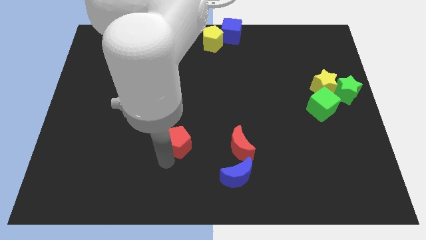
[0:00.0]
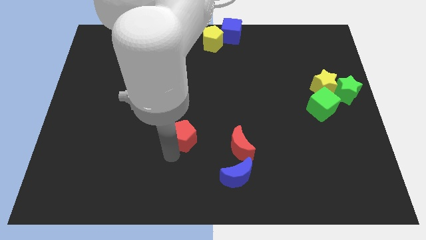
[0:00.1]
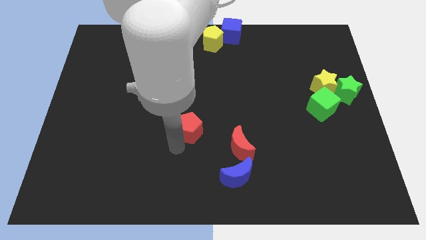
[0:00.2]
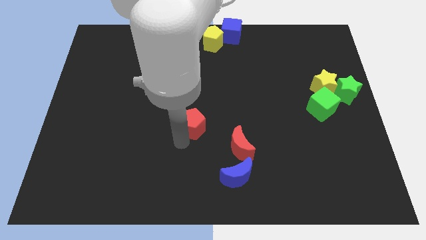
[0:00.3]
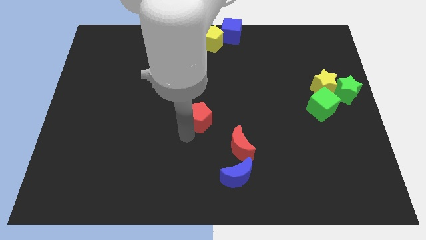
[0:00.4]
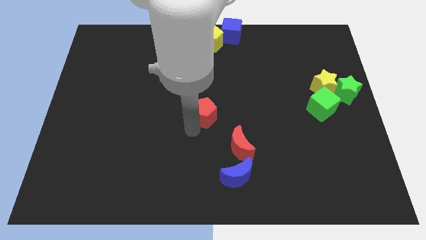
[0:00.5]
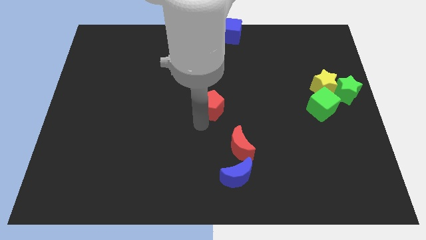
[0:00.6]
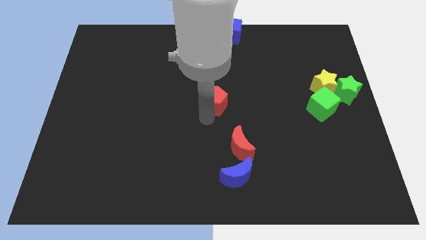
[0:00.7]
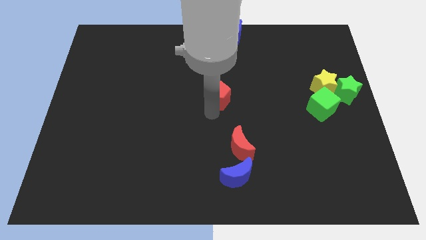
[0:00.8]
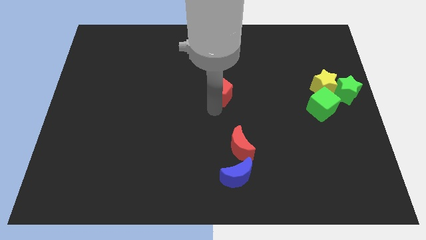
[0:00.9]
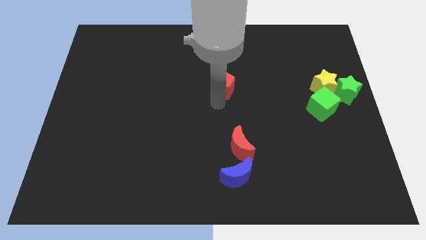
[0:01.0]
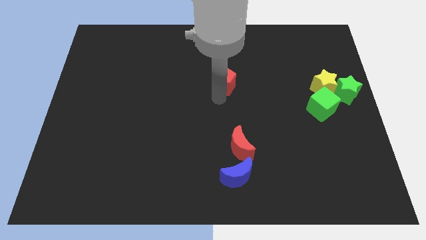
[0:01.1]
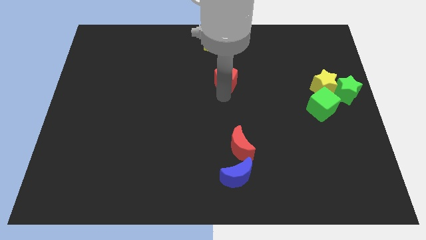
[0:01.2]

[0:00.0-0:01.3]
push the red pentagon diagonally top left to the red moon

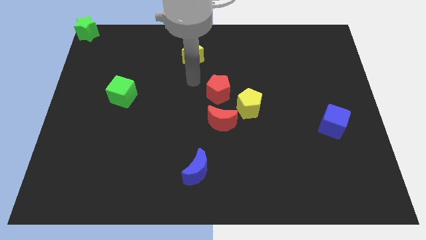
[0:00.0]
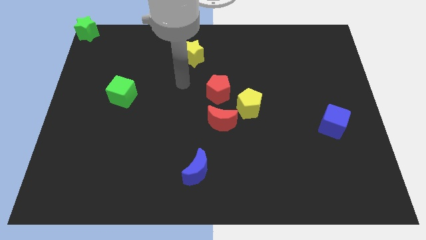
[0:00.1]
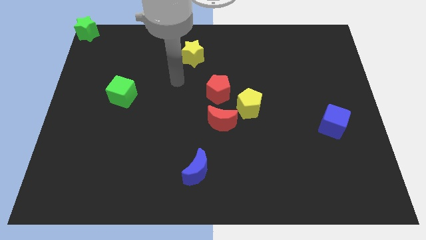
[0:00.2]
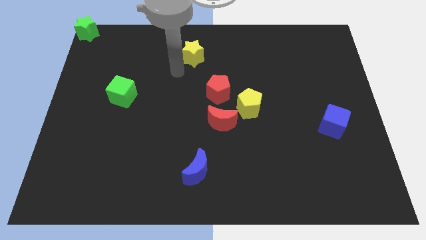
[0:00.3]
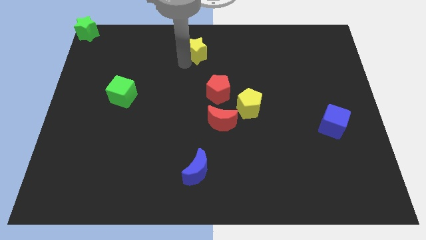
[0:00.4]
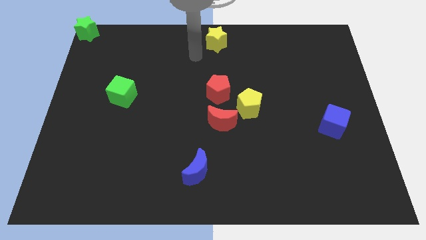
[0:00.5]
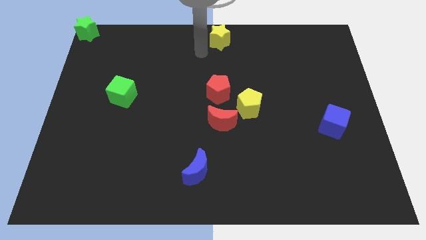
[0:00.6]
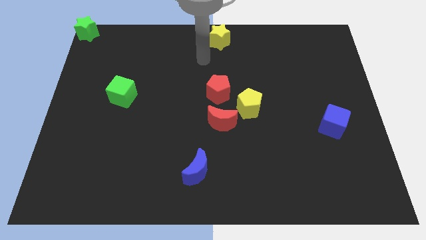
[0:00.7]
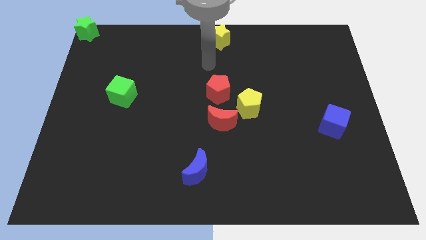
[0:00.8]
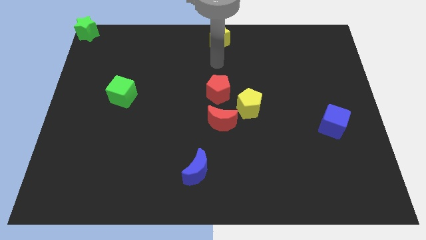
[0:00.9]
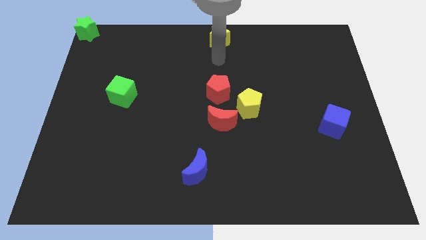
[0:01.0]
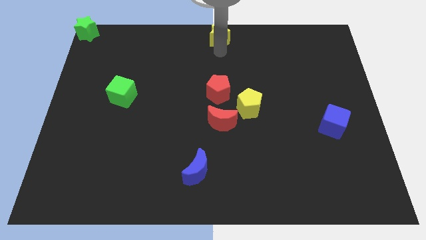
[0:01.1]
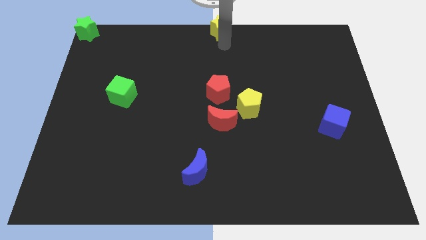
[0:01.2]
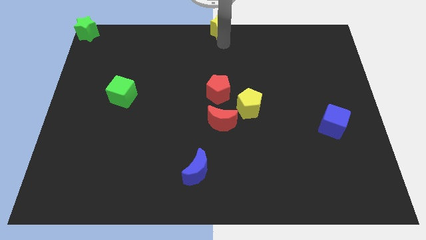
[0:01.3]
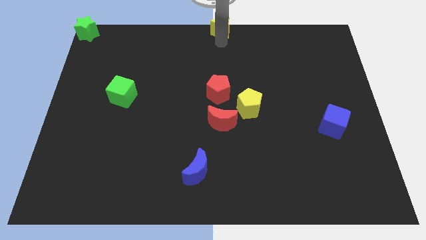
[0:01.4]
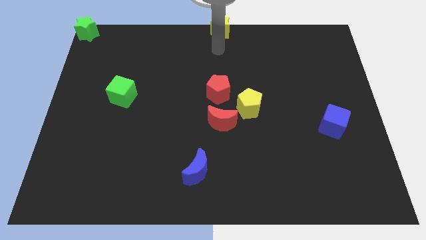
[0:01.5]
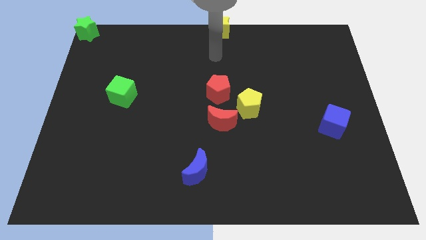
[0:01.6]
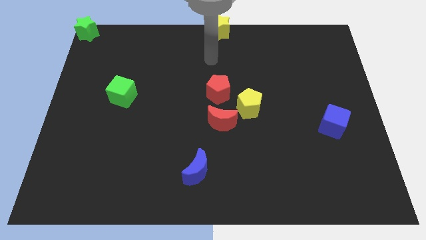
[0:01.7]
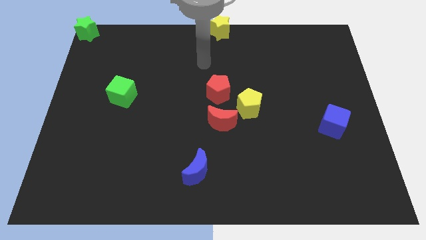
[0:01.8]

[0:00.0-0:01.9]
push the yellow pentagon to the top center of the board

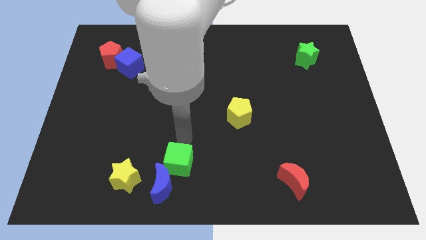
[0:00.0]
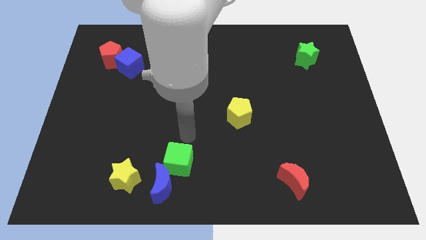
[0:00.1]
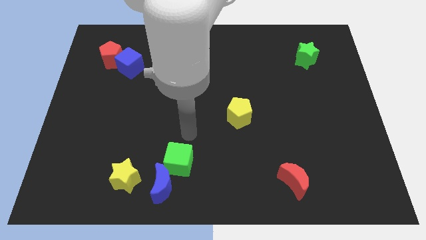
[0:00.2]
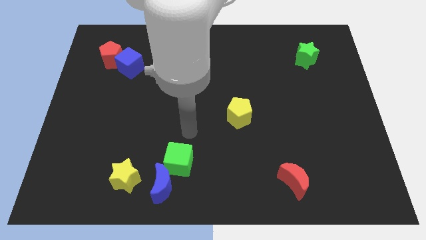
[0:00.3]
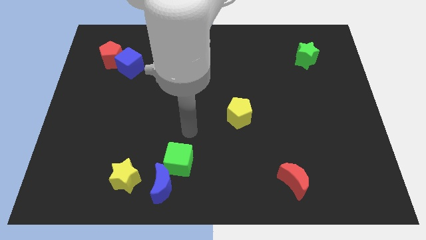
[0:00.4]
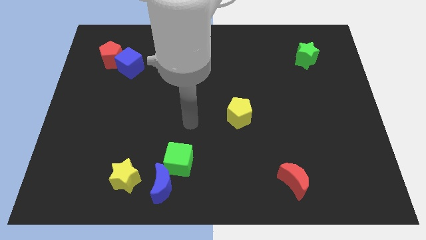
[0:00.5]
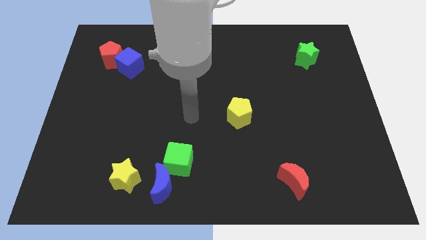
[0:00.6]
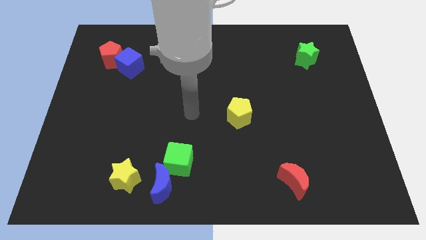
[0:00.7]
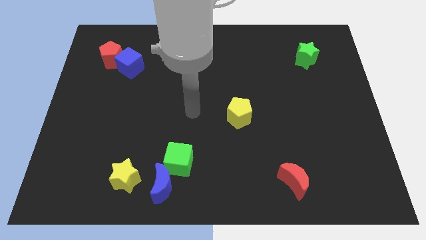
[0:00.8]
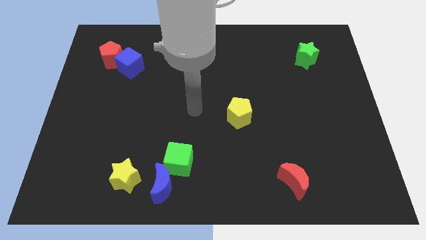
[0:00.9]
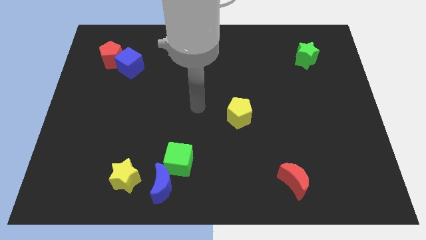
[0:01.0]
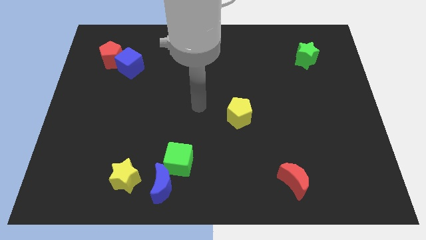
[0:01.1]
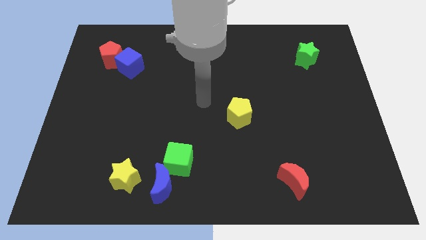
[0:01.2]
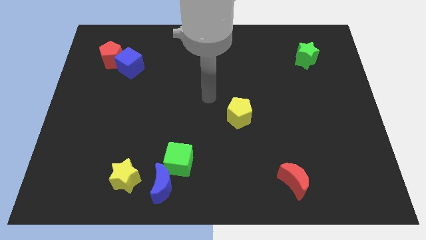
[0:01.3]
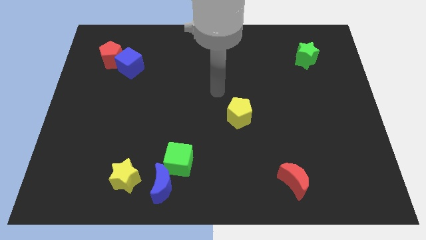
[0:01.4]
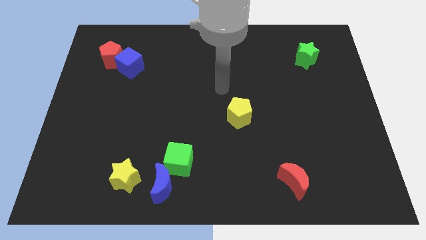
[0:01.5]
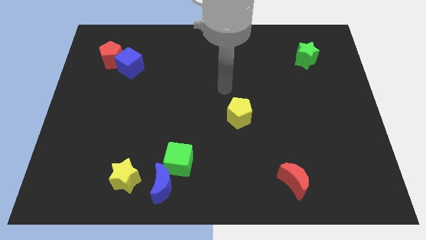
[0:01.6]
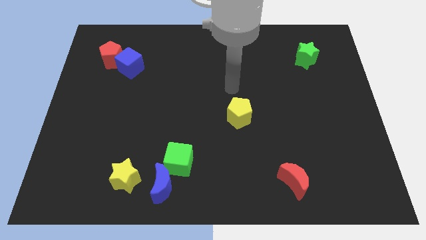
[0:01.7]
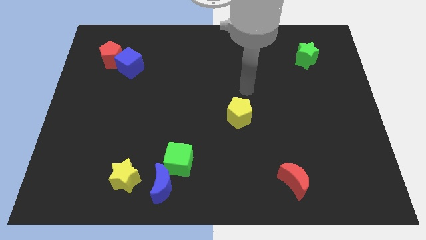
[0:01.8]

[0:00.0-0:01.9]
point your arm above the yellow pentagon

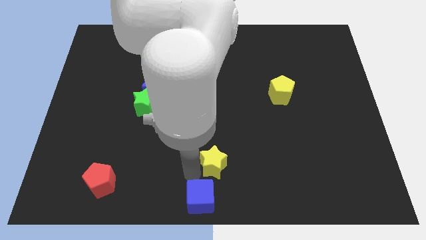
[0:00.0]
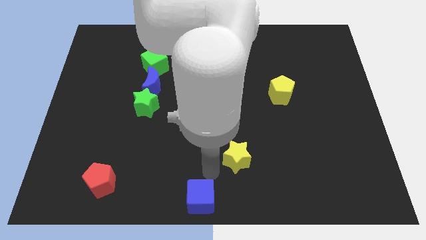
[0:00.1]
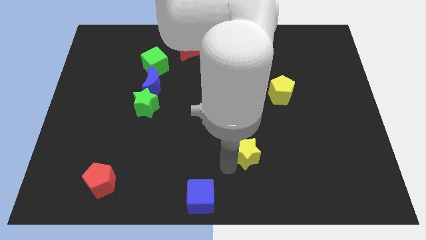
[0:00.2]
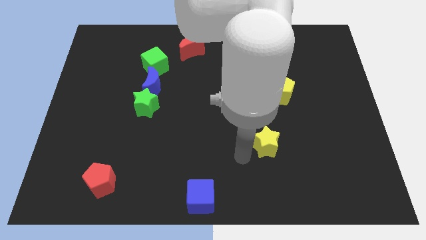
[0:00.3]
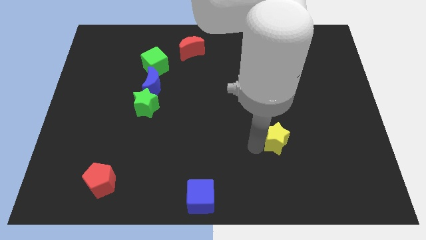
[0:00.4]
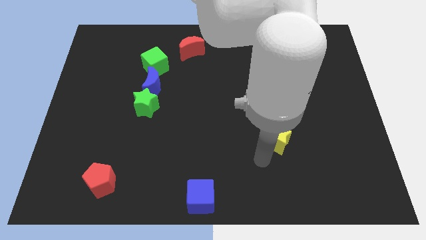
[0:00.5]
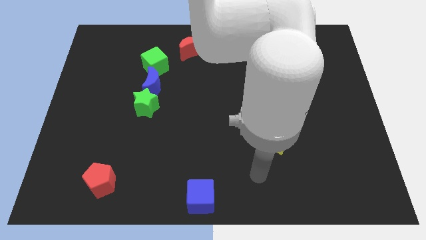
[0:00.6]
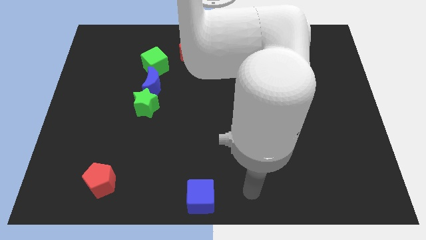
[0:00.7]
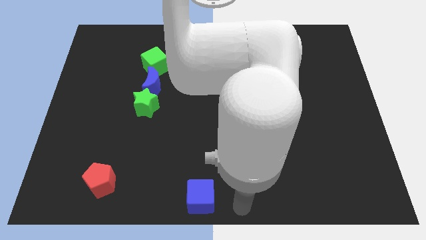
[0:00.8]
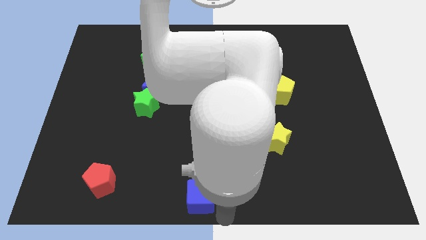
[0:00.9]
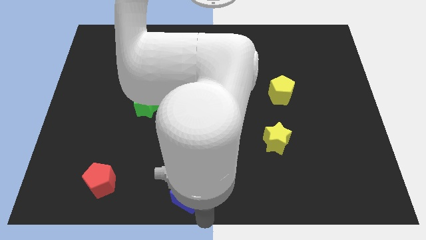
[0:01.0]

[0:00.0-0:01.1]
move the yellow star below the yellow pentagon

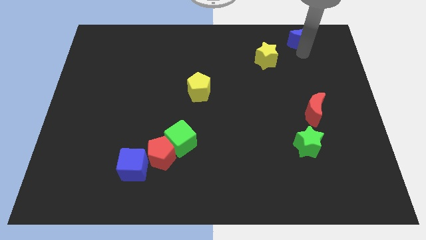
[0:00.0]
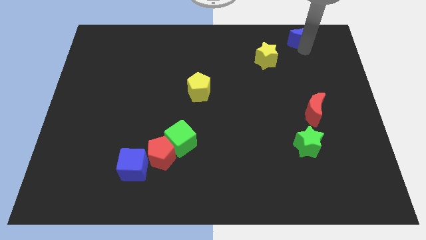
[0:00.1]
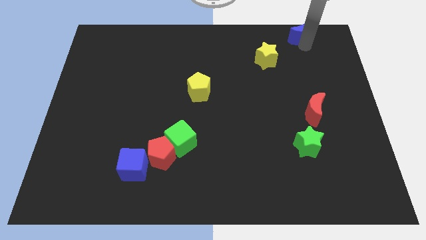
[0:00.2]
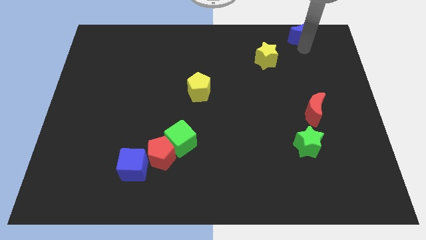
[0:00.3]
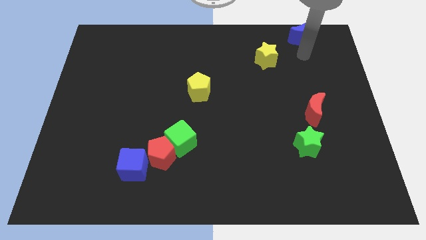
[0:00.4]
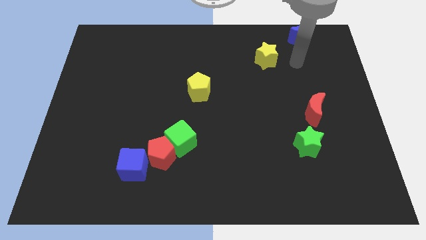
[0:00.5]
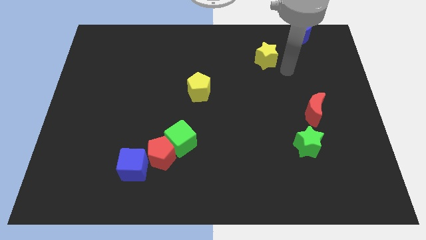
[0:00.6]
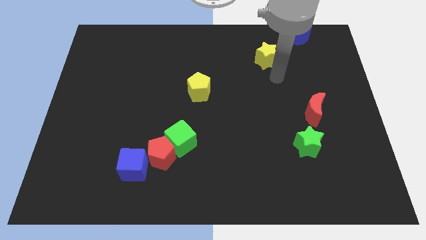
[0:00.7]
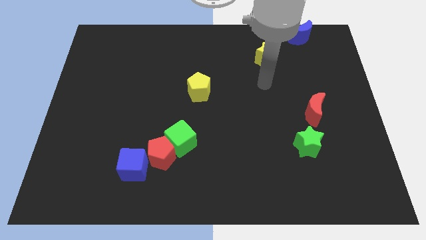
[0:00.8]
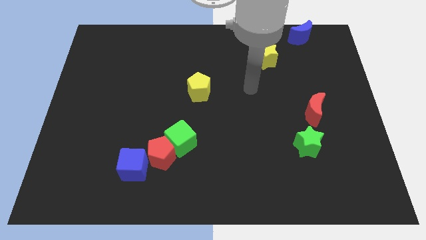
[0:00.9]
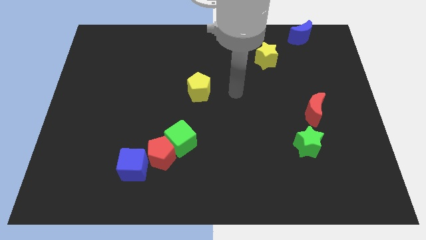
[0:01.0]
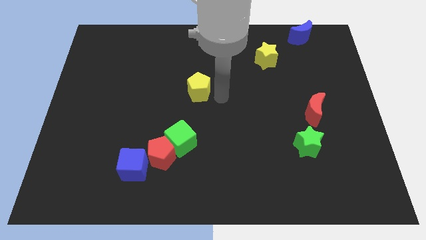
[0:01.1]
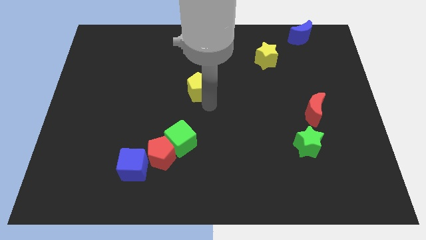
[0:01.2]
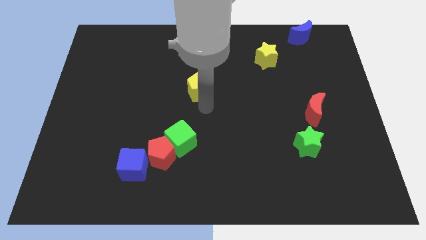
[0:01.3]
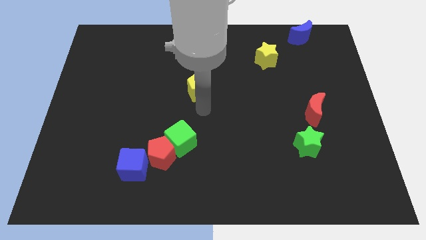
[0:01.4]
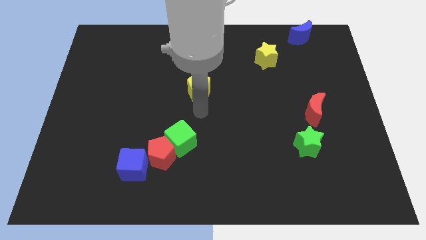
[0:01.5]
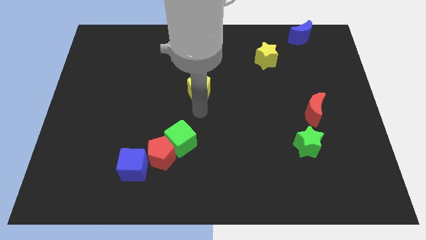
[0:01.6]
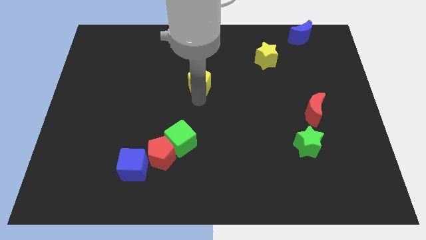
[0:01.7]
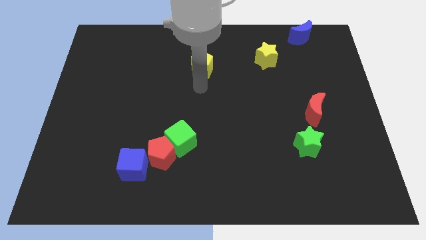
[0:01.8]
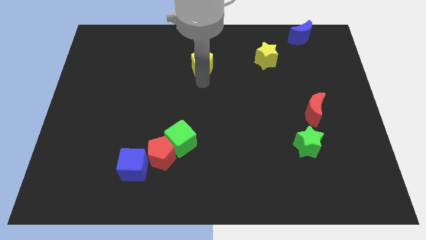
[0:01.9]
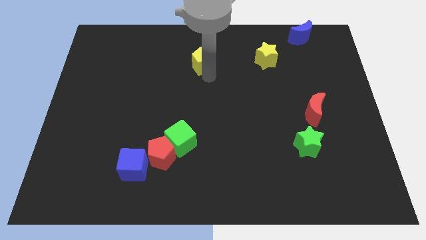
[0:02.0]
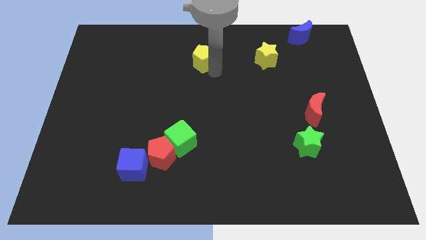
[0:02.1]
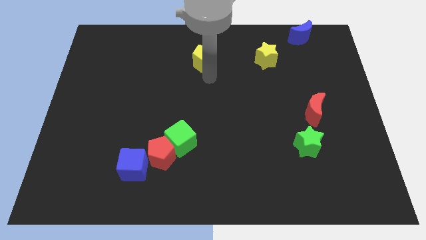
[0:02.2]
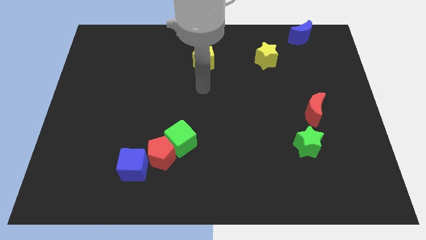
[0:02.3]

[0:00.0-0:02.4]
place the yellow pentagon parallel to the yellow star

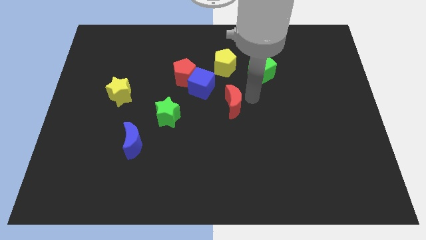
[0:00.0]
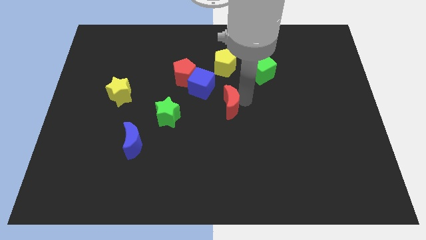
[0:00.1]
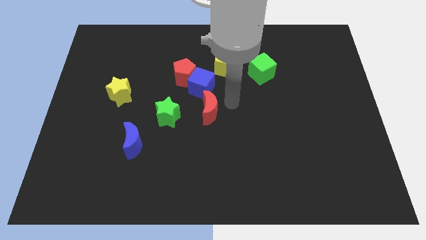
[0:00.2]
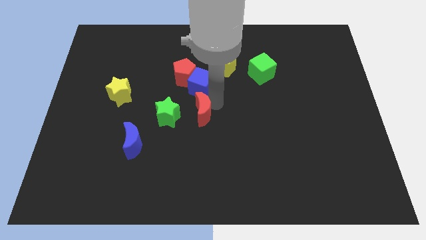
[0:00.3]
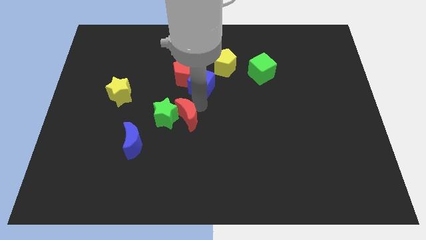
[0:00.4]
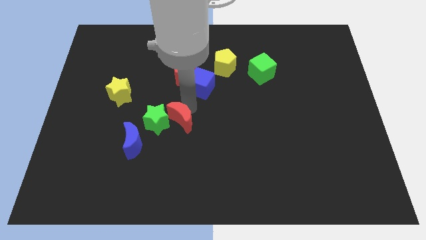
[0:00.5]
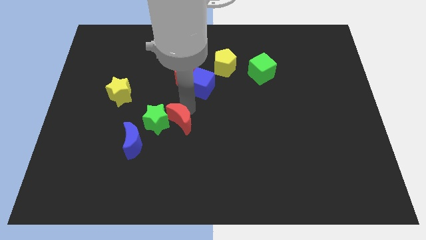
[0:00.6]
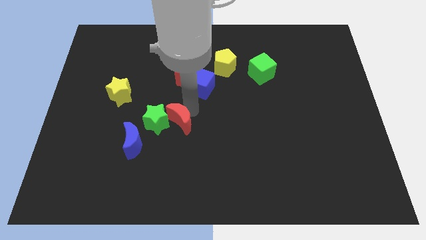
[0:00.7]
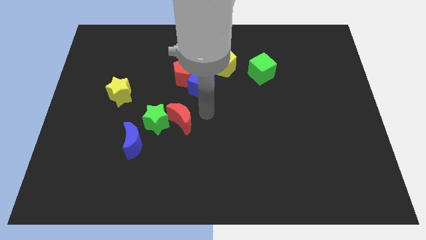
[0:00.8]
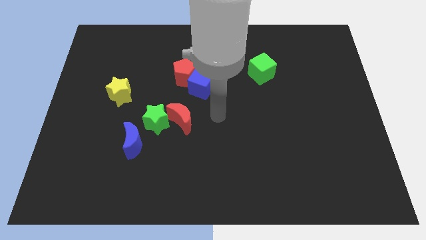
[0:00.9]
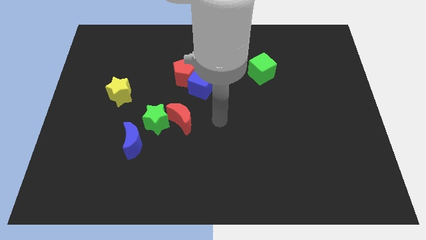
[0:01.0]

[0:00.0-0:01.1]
attach the red moon to the green star
